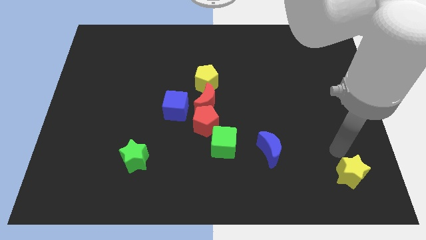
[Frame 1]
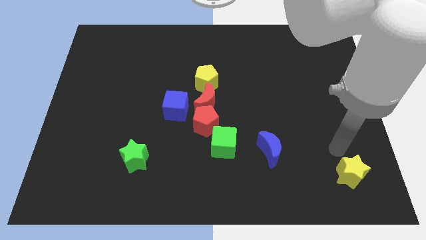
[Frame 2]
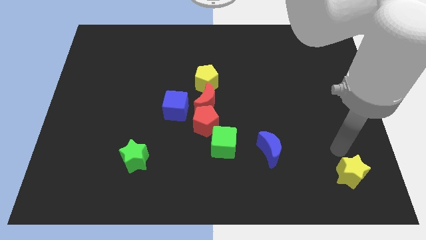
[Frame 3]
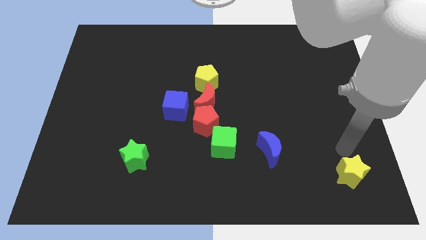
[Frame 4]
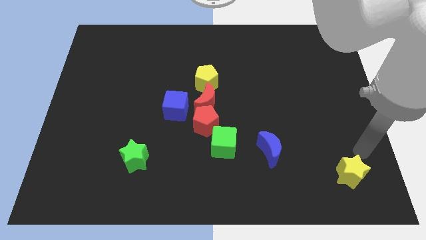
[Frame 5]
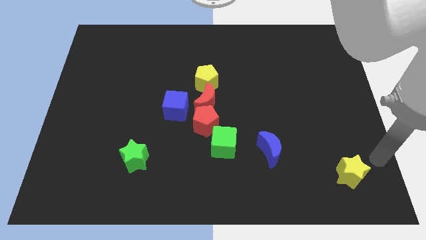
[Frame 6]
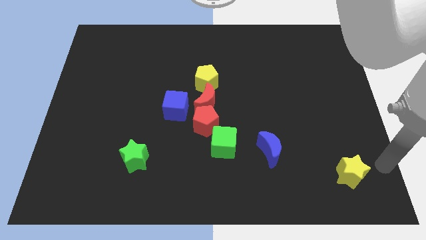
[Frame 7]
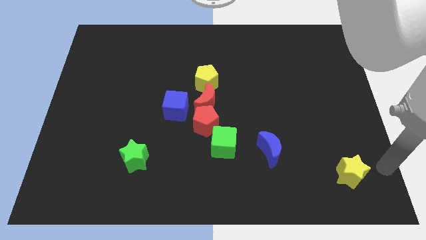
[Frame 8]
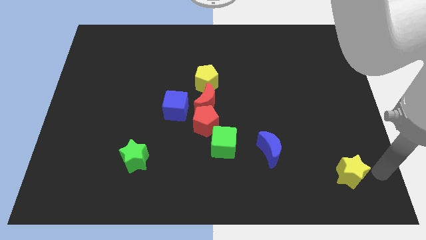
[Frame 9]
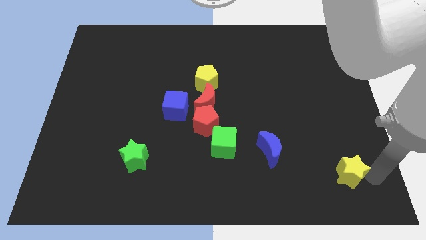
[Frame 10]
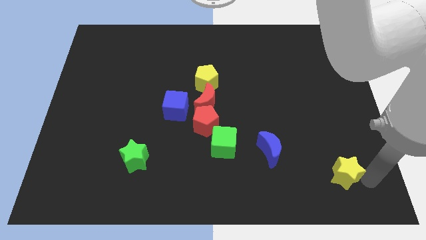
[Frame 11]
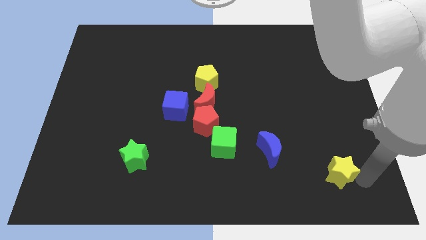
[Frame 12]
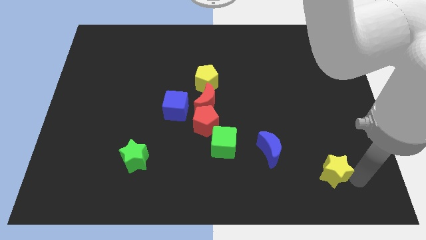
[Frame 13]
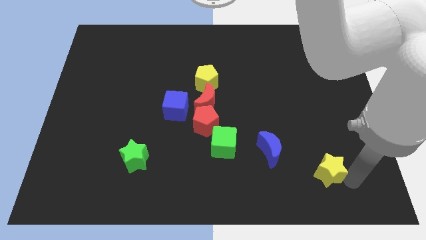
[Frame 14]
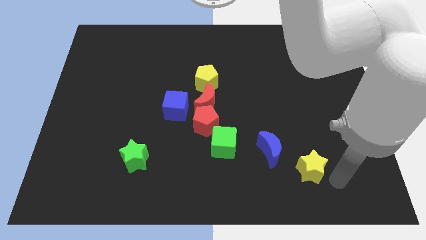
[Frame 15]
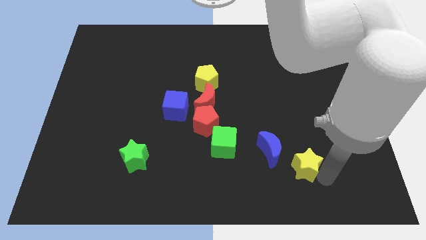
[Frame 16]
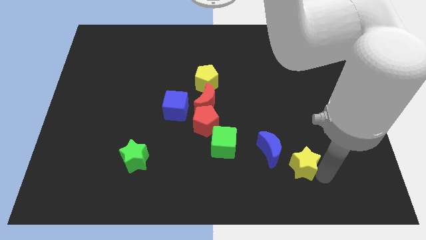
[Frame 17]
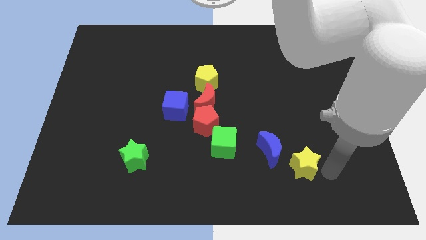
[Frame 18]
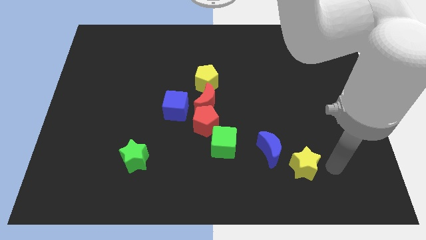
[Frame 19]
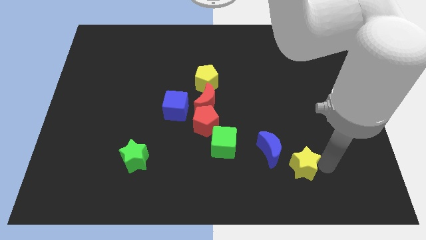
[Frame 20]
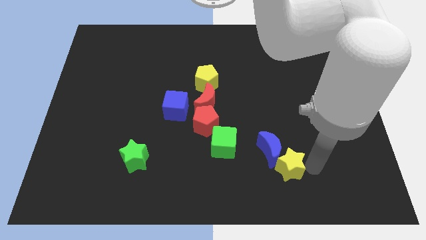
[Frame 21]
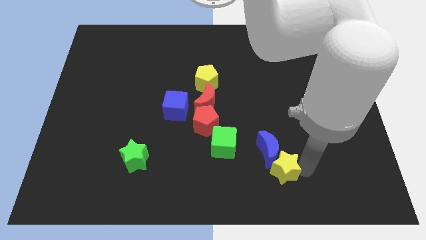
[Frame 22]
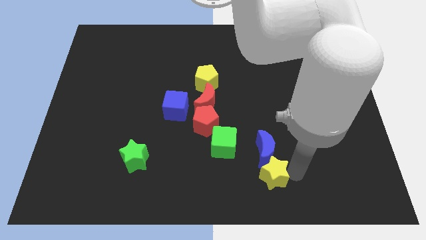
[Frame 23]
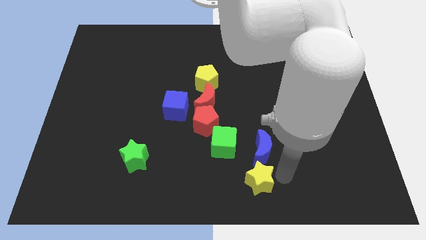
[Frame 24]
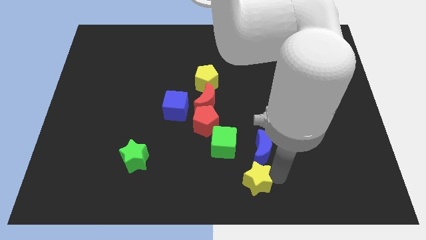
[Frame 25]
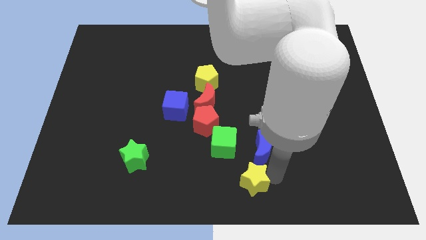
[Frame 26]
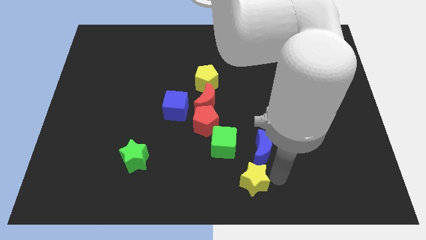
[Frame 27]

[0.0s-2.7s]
push yellow star into the blue moon

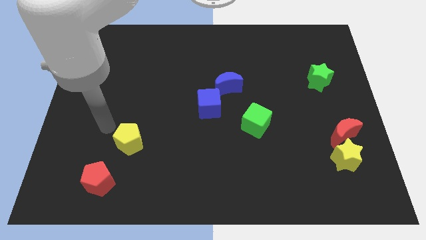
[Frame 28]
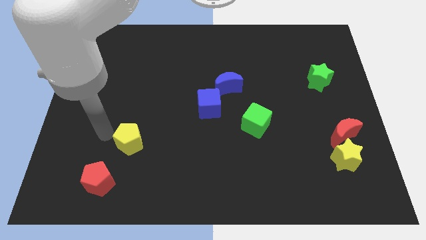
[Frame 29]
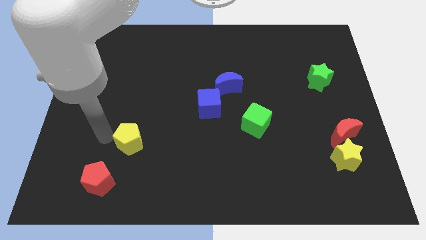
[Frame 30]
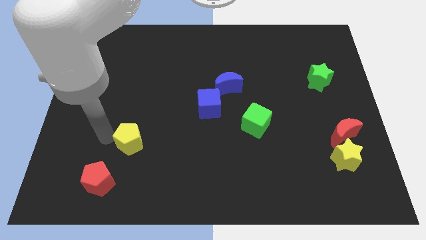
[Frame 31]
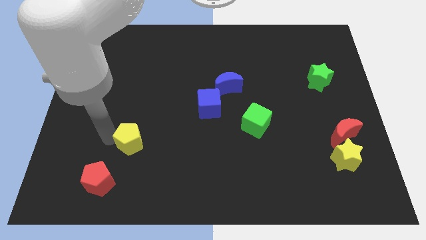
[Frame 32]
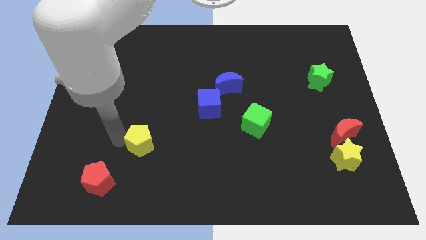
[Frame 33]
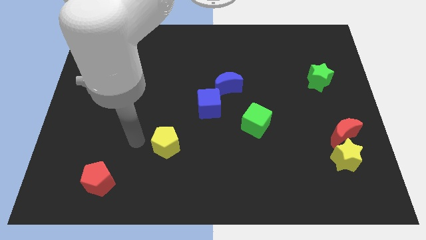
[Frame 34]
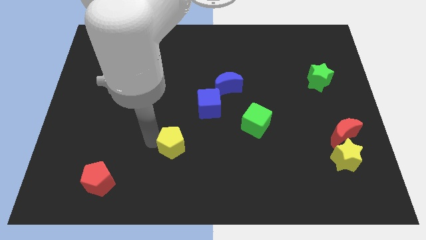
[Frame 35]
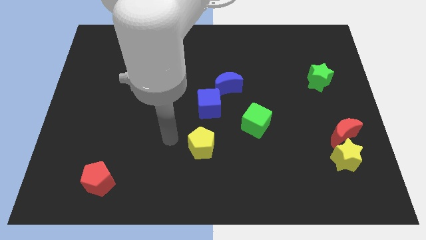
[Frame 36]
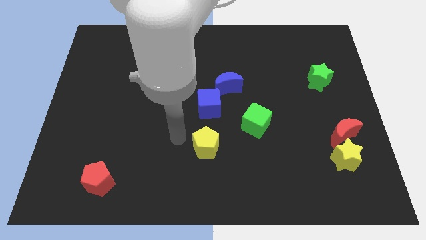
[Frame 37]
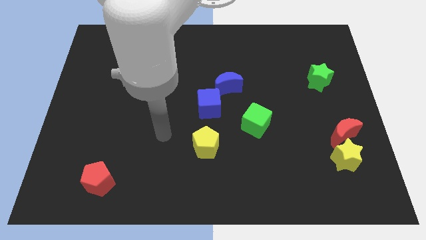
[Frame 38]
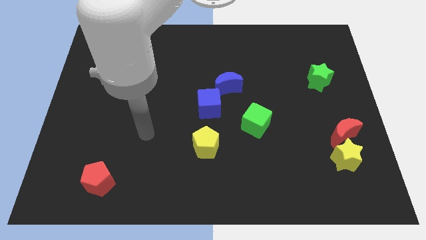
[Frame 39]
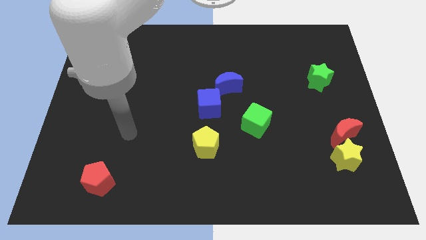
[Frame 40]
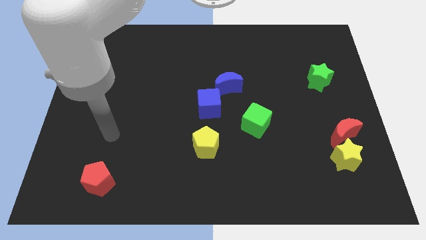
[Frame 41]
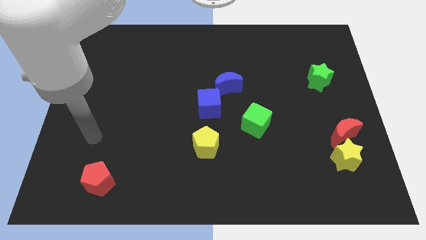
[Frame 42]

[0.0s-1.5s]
place the yellow pentagon below the blue cube

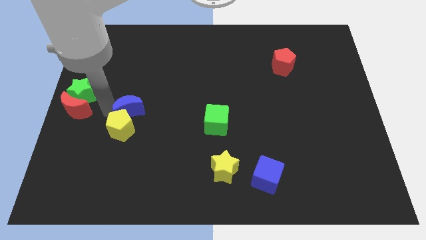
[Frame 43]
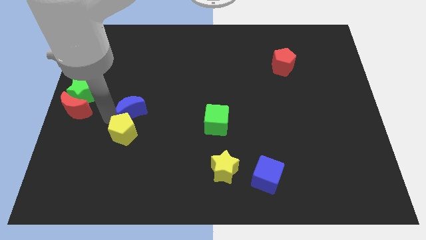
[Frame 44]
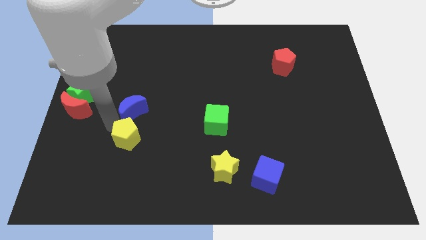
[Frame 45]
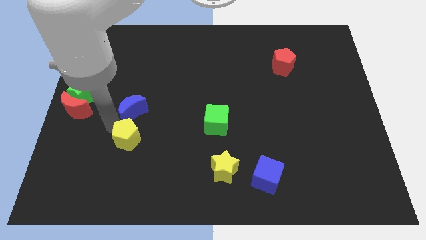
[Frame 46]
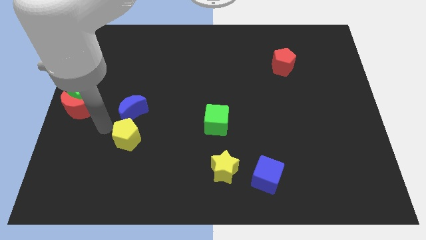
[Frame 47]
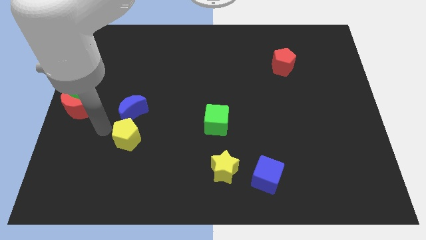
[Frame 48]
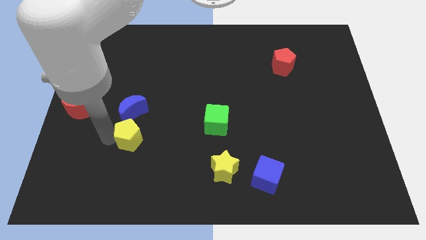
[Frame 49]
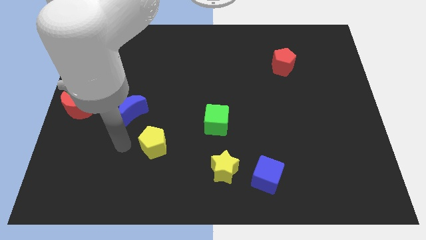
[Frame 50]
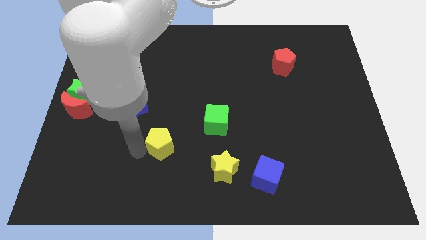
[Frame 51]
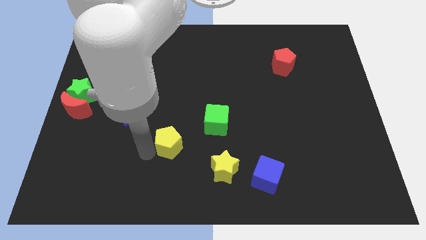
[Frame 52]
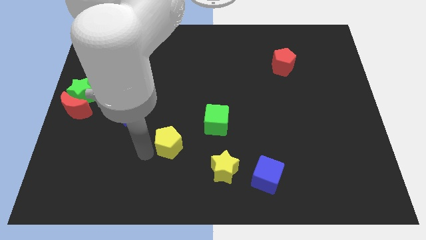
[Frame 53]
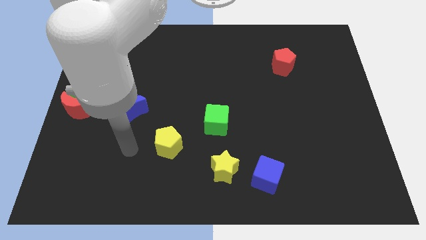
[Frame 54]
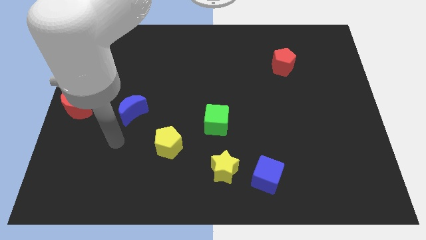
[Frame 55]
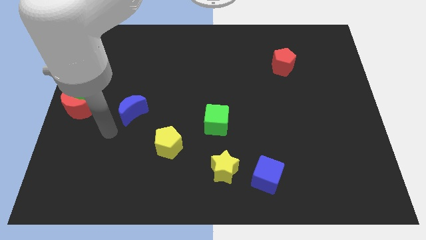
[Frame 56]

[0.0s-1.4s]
place the yellow pentagon below the green cube

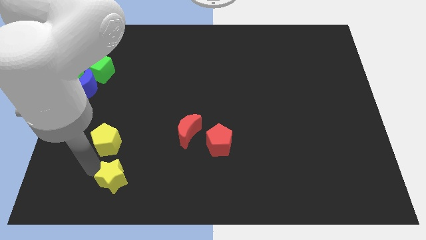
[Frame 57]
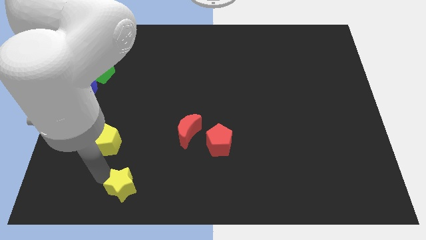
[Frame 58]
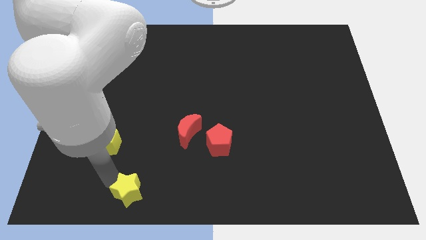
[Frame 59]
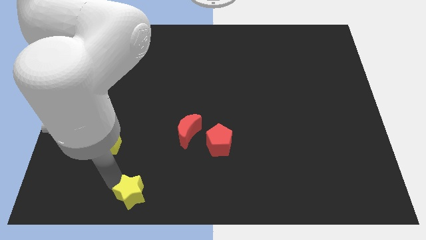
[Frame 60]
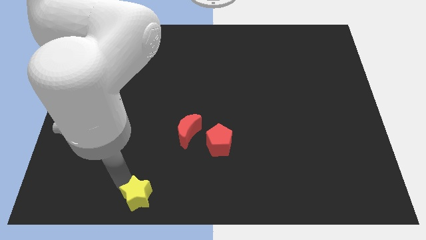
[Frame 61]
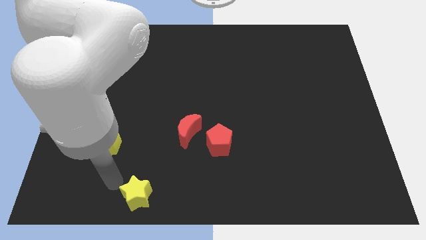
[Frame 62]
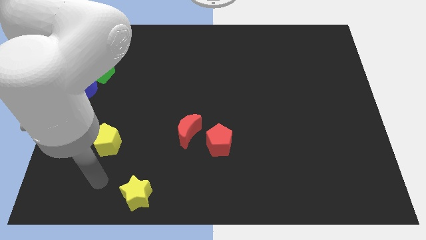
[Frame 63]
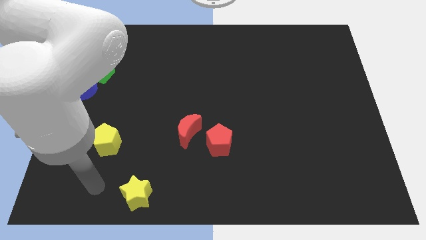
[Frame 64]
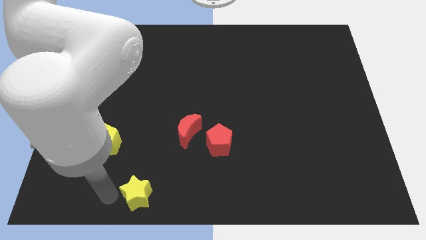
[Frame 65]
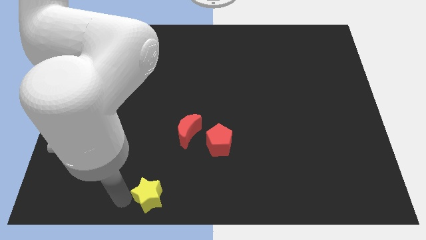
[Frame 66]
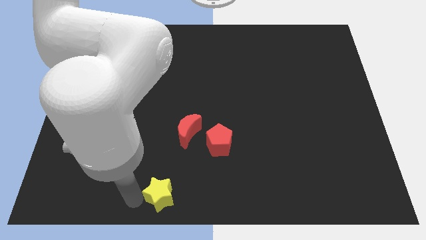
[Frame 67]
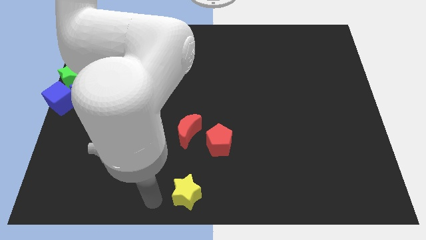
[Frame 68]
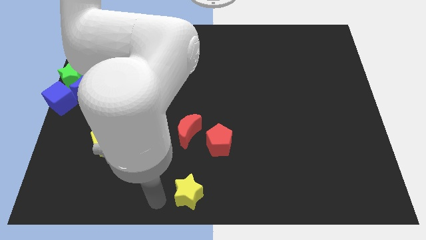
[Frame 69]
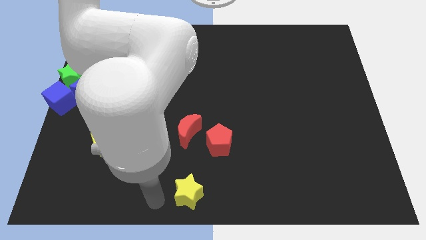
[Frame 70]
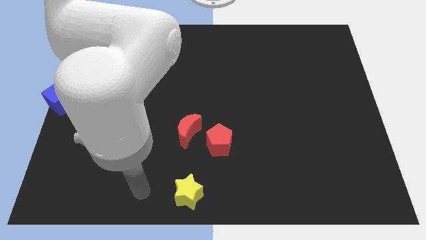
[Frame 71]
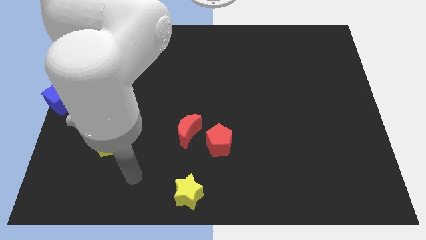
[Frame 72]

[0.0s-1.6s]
push the yellow star to the bottom center of the board

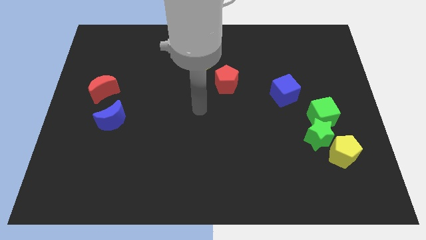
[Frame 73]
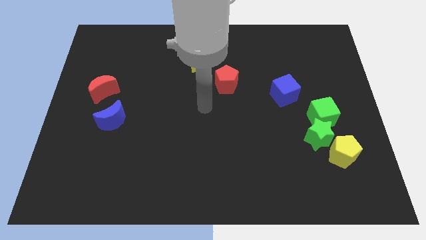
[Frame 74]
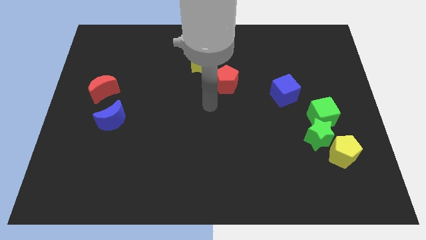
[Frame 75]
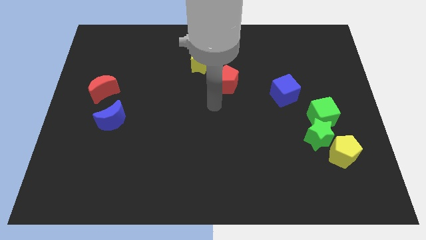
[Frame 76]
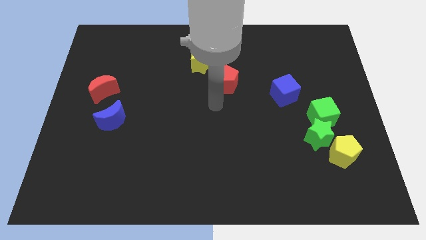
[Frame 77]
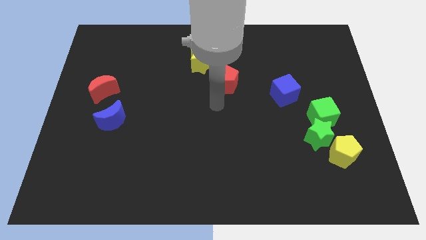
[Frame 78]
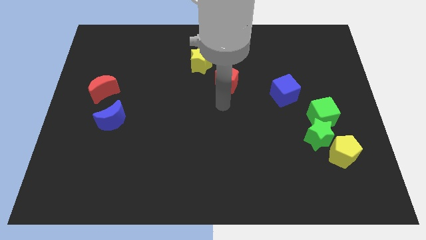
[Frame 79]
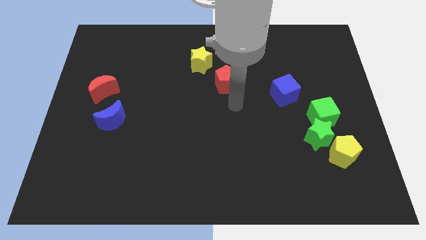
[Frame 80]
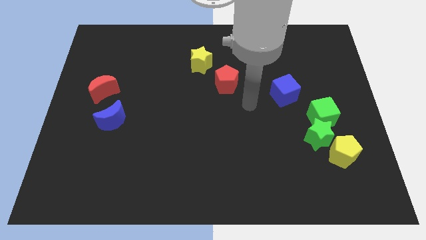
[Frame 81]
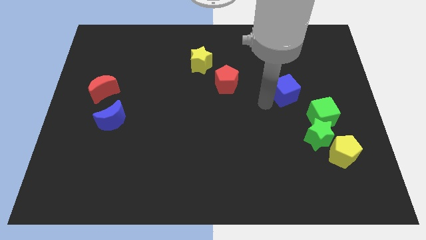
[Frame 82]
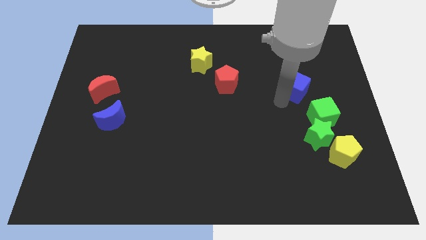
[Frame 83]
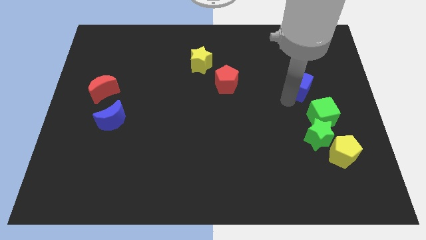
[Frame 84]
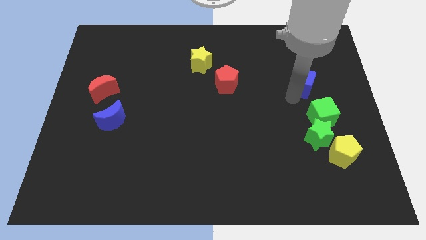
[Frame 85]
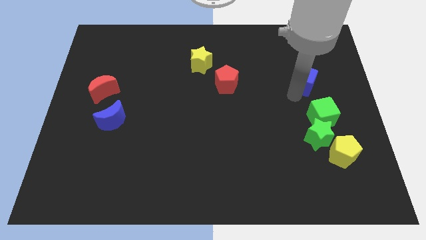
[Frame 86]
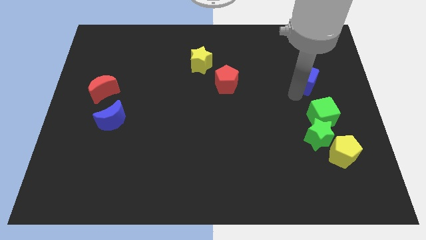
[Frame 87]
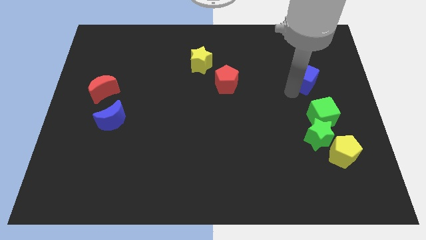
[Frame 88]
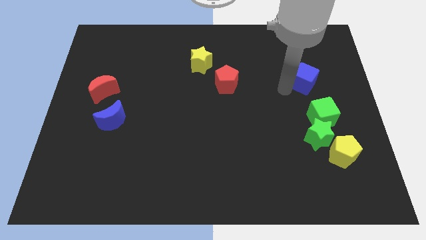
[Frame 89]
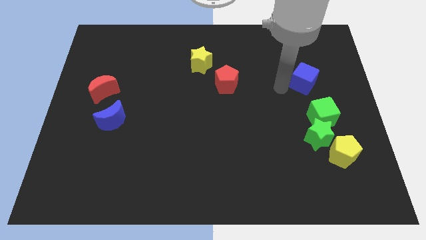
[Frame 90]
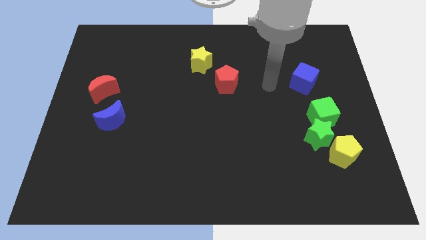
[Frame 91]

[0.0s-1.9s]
move the blue cube slightly up
